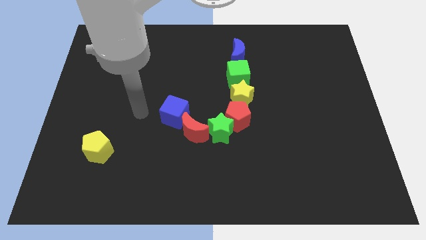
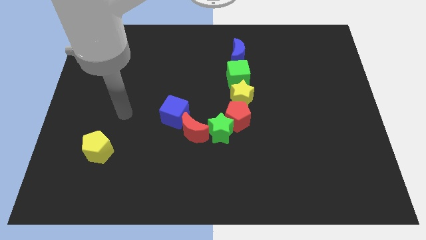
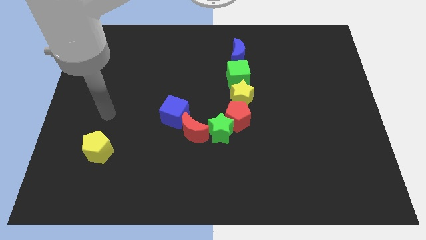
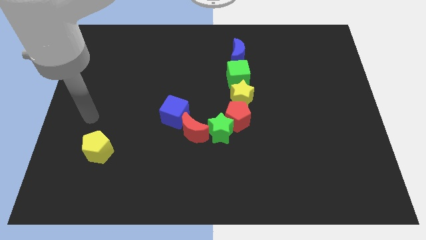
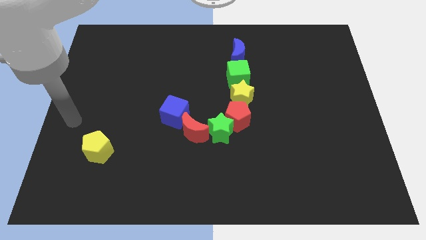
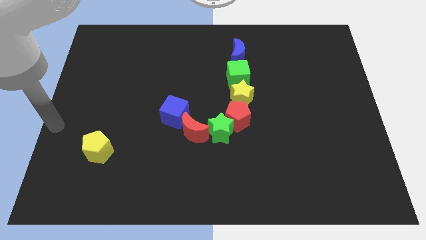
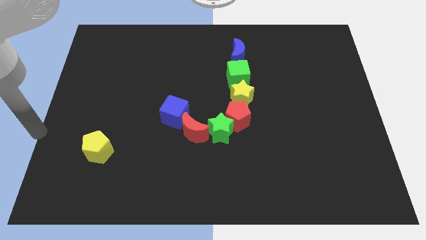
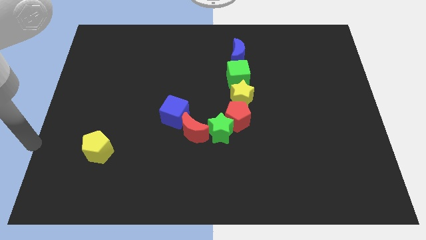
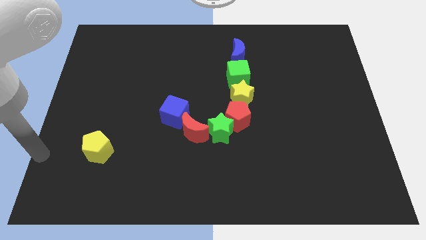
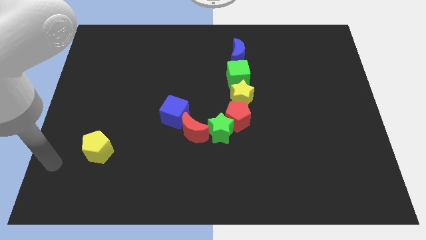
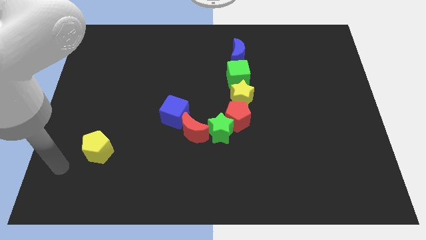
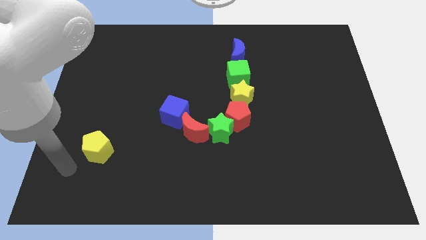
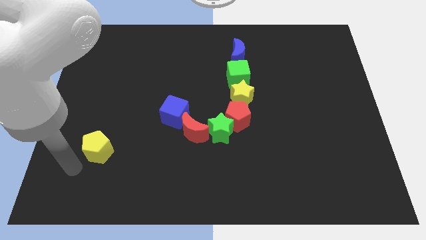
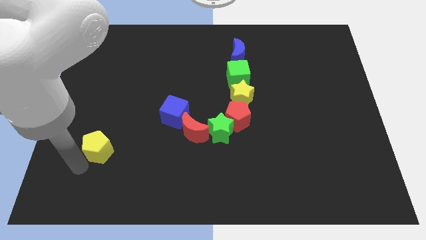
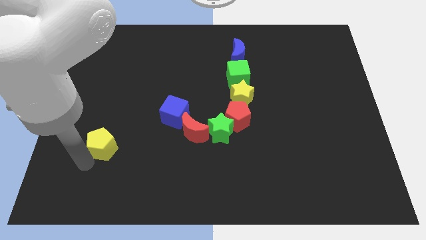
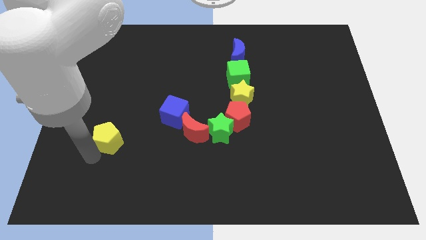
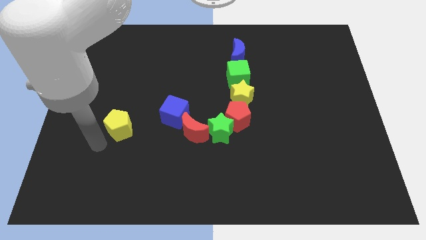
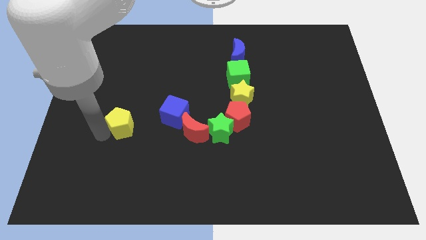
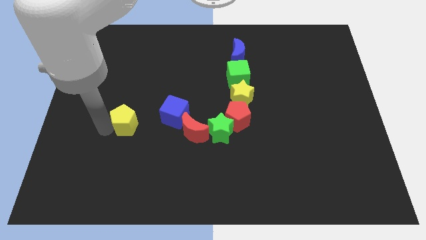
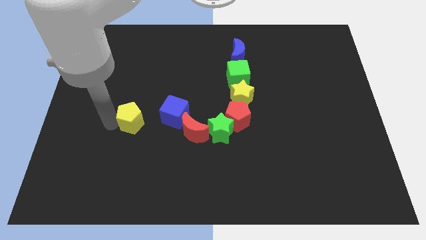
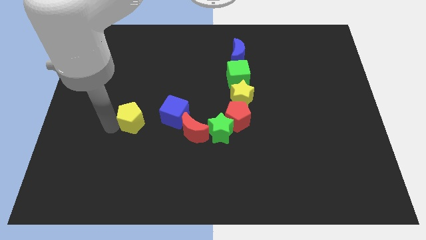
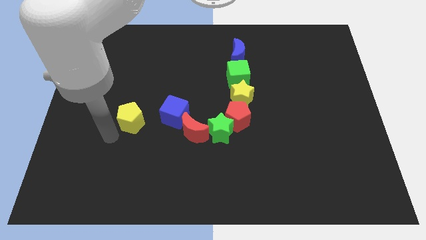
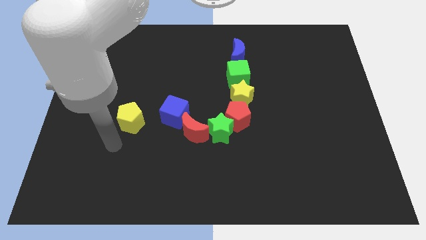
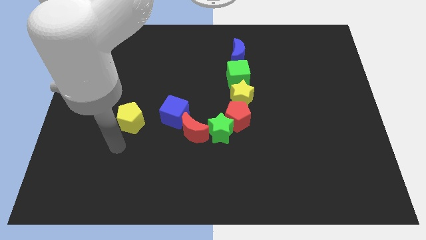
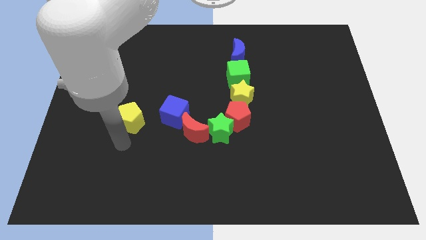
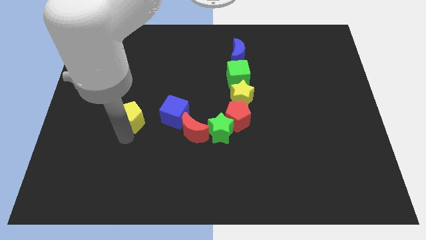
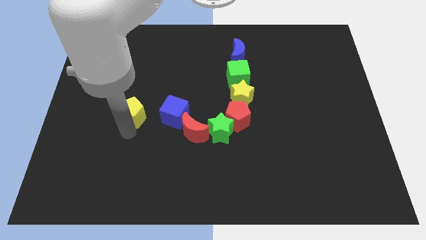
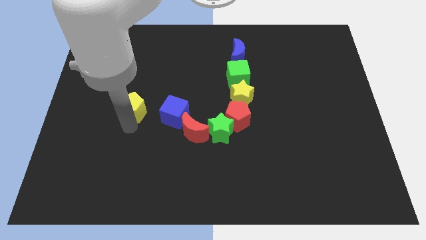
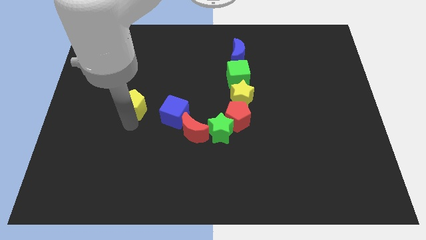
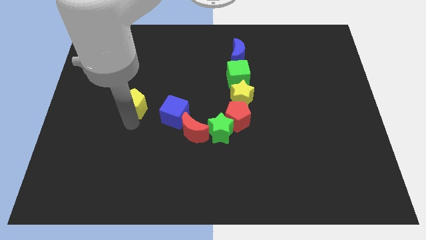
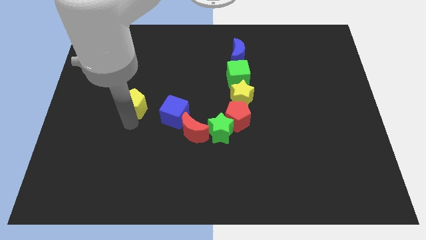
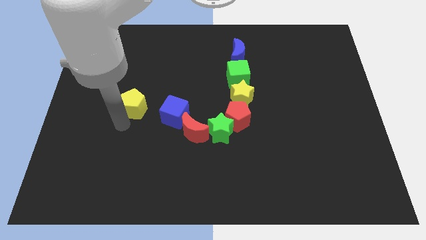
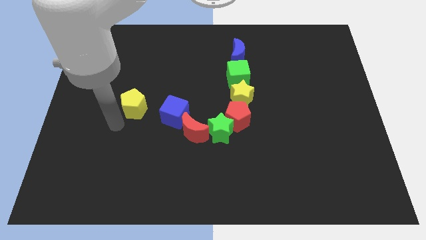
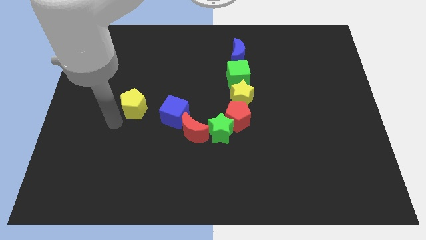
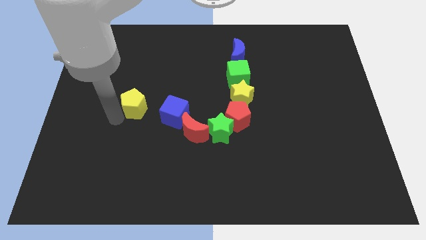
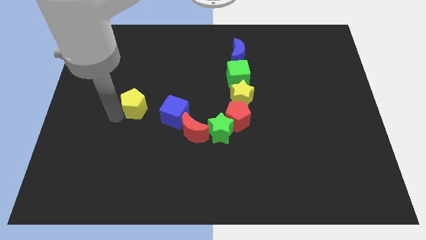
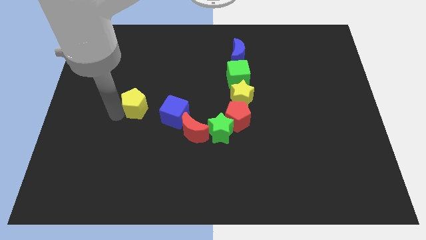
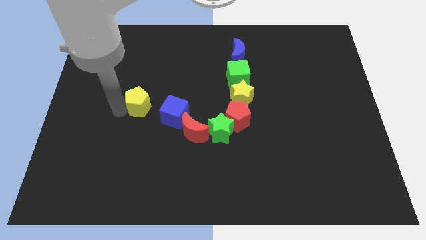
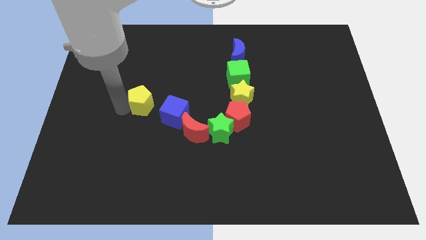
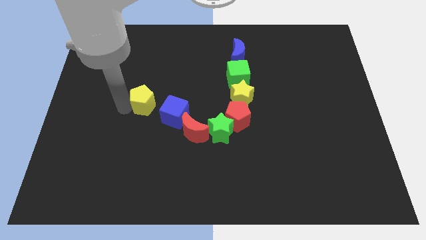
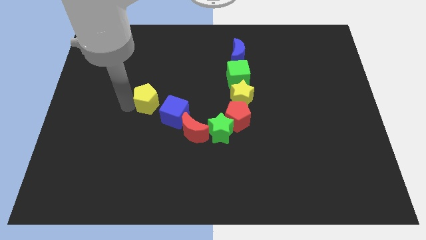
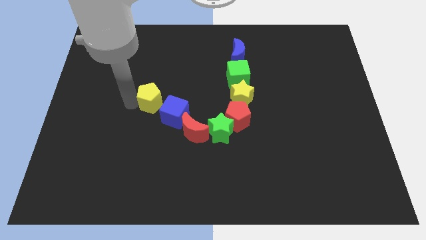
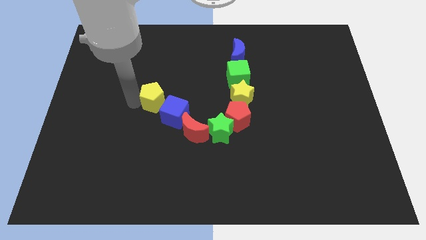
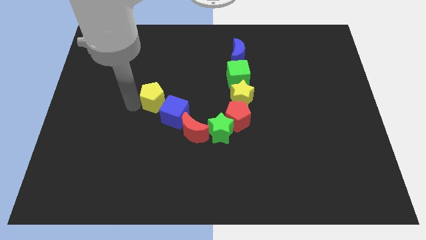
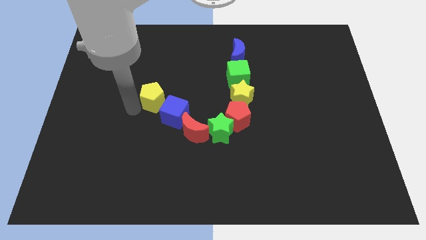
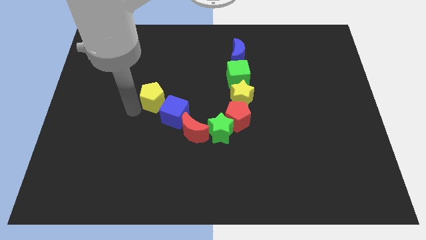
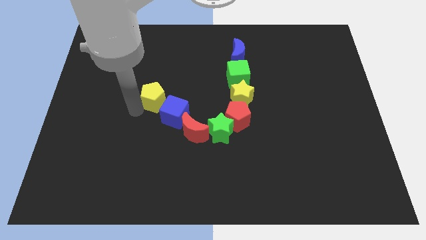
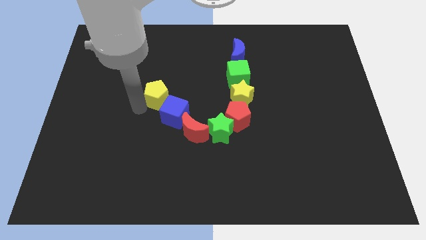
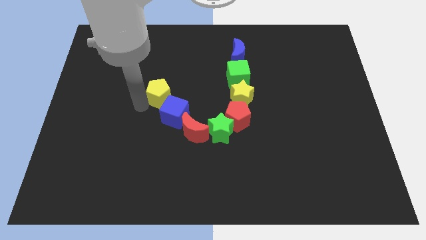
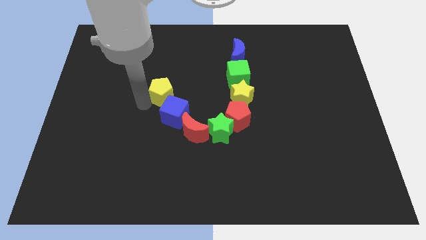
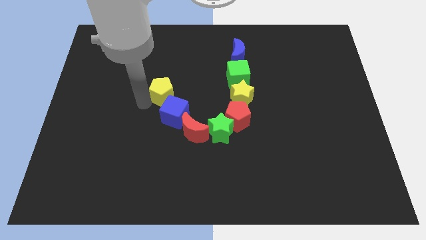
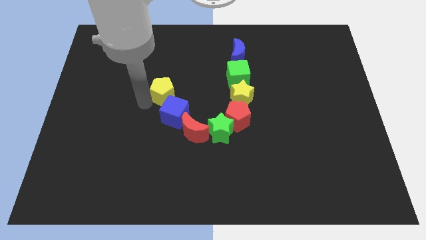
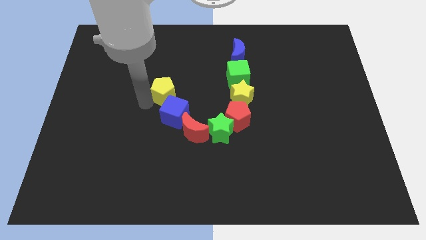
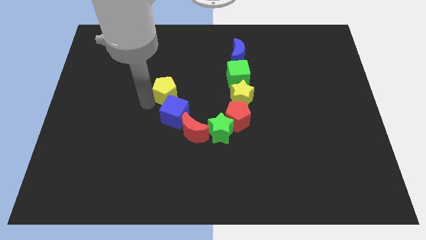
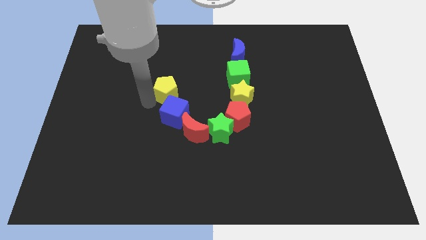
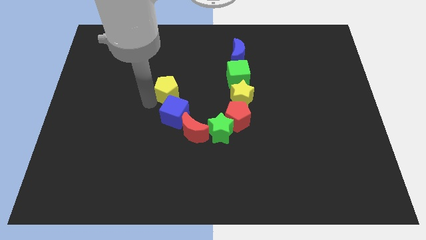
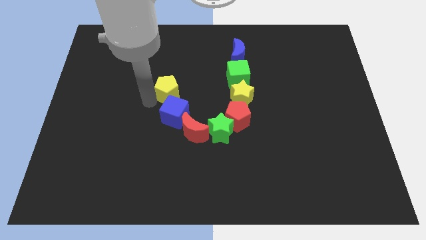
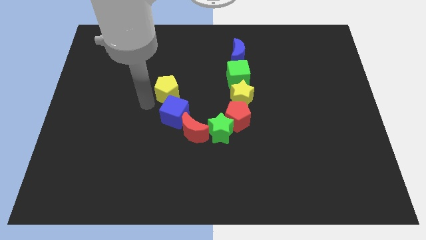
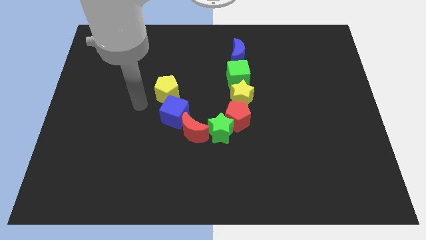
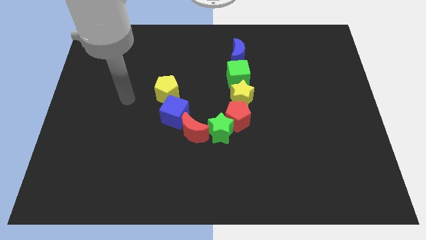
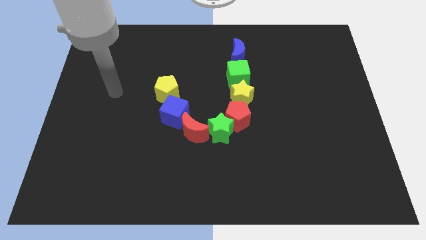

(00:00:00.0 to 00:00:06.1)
place the yellow pentagon above the blue cube

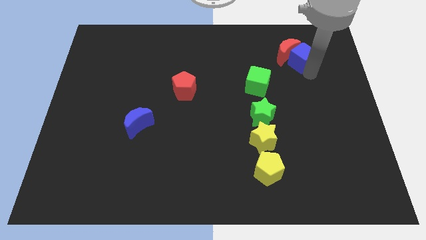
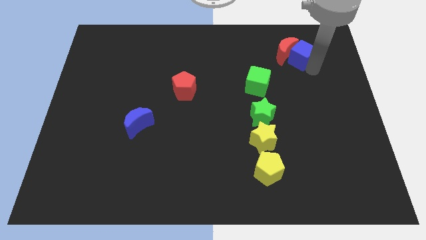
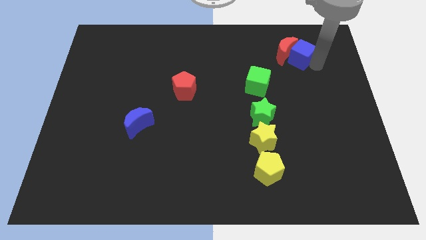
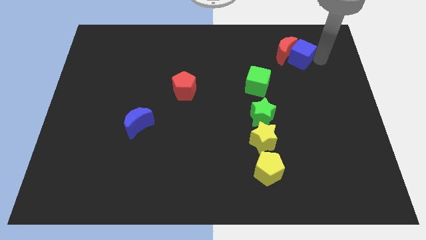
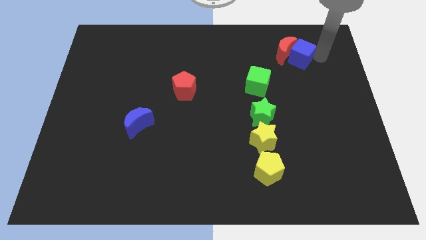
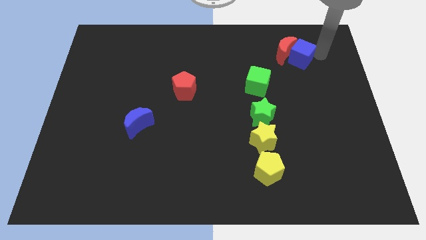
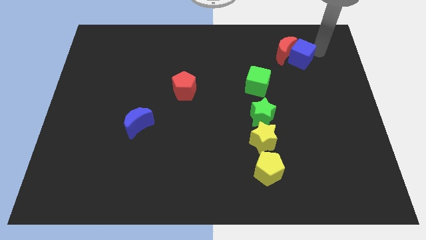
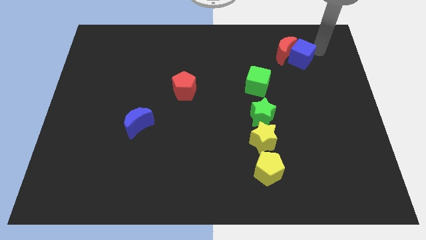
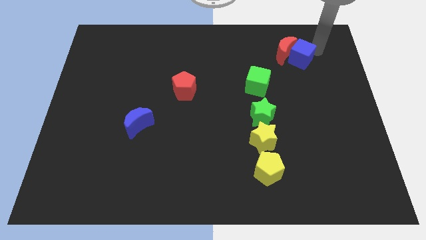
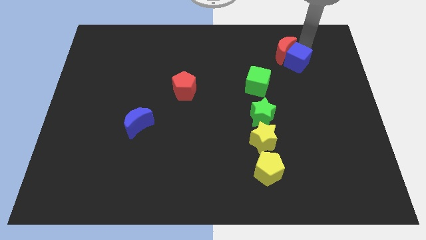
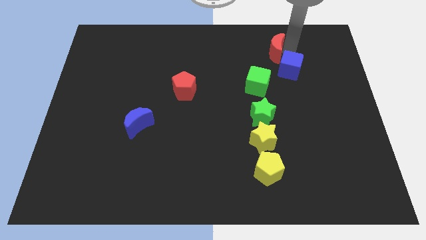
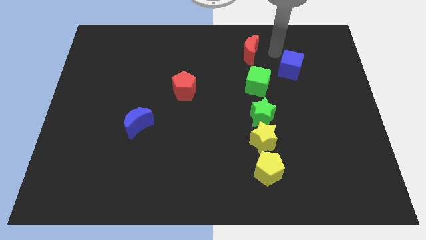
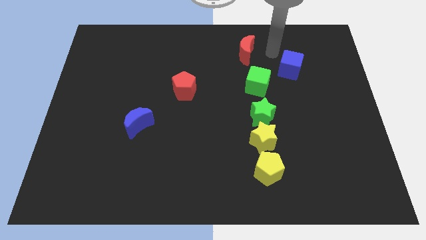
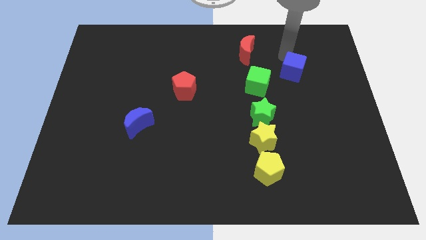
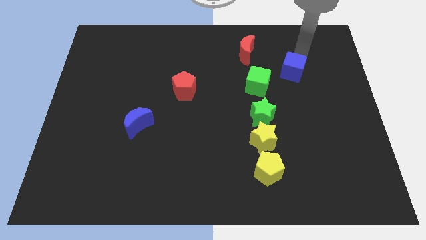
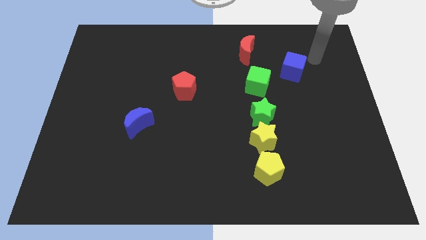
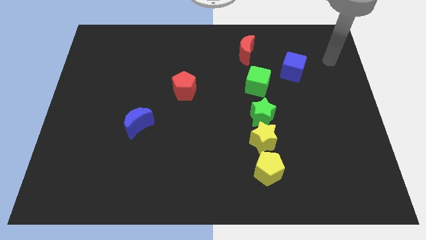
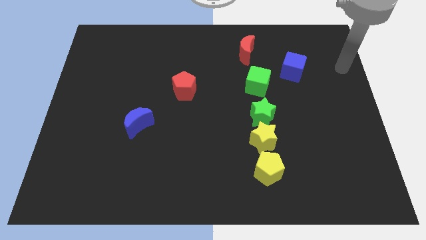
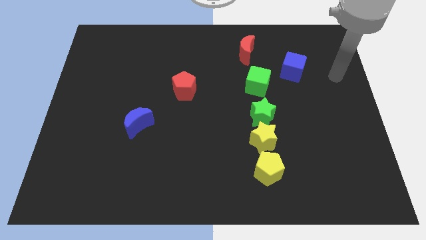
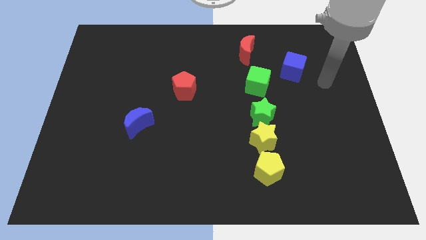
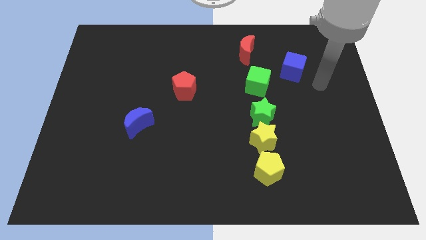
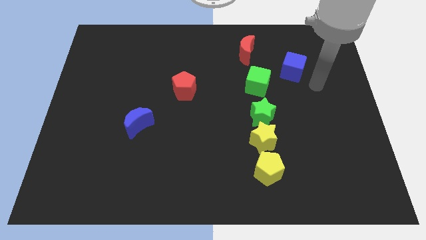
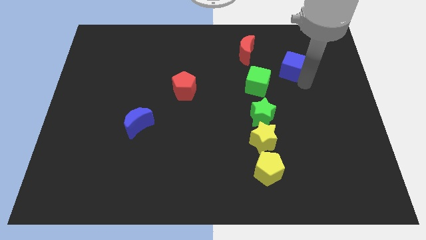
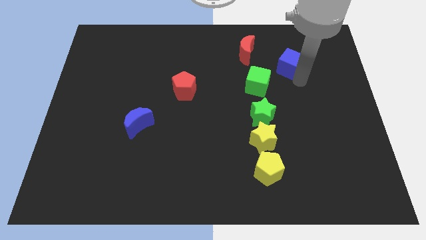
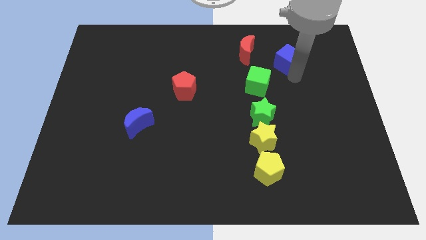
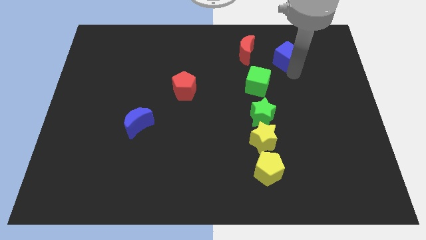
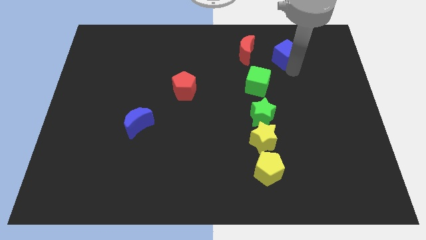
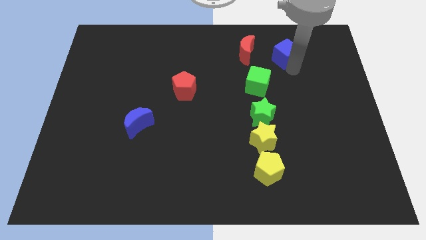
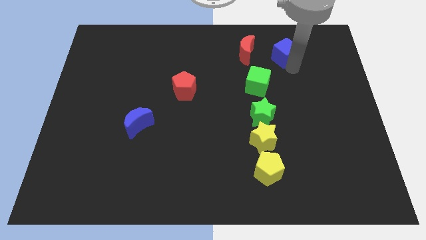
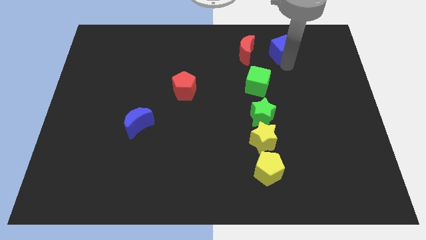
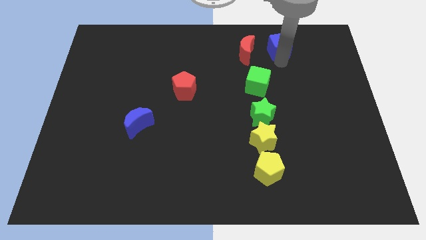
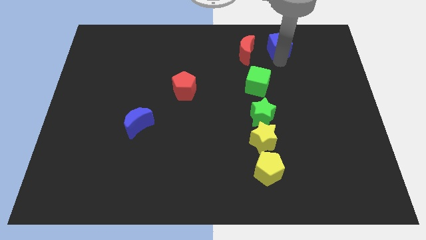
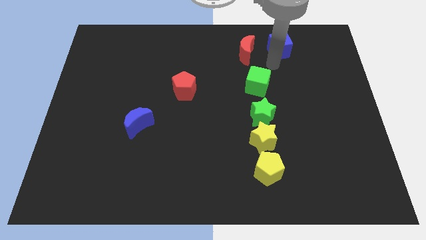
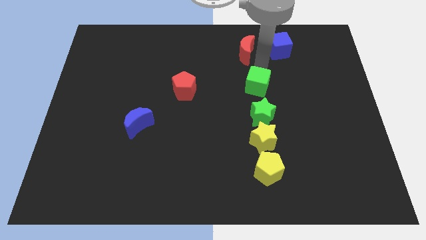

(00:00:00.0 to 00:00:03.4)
separate the red moon and blue cube
